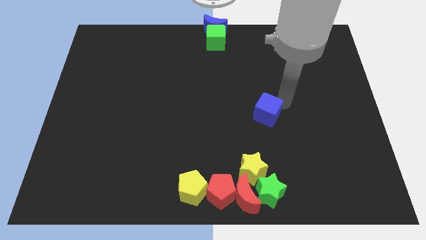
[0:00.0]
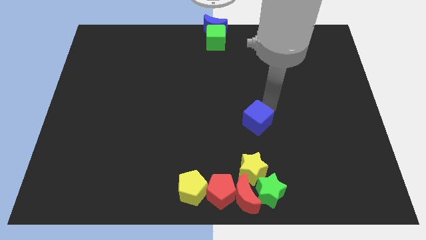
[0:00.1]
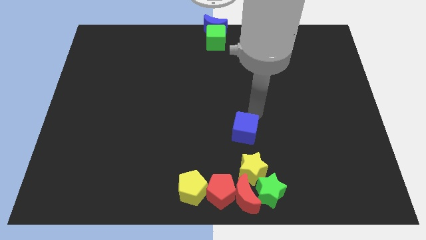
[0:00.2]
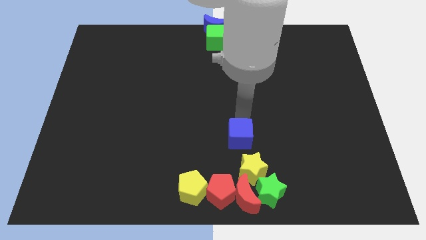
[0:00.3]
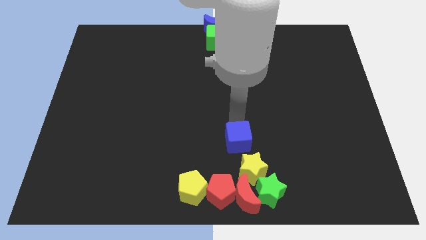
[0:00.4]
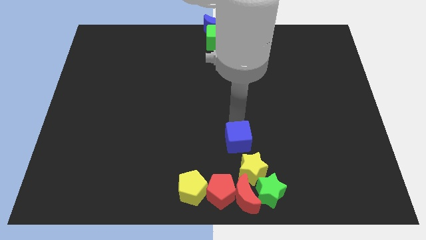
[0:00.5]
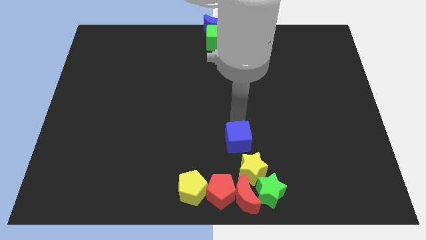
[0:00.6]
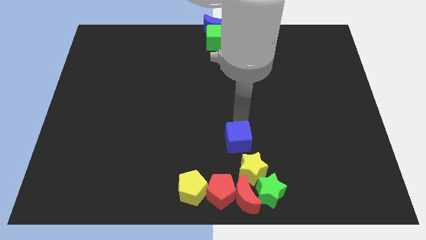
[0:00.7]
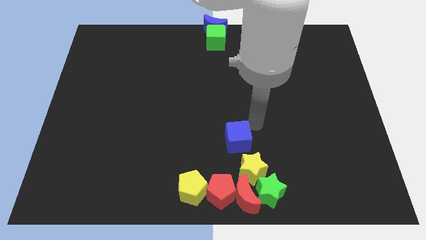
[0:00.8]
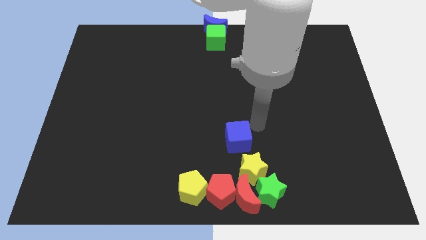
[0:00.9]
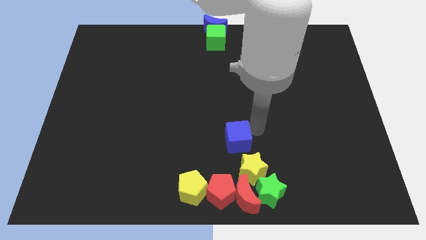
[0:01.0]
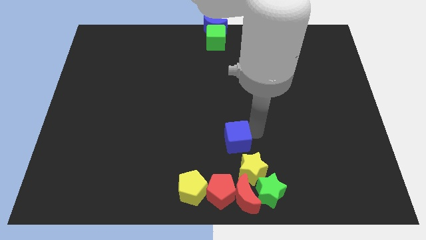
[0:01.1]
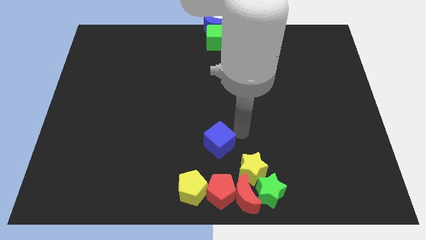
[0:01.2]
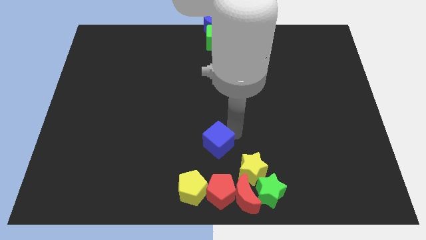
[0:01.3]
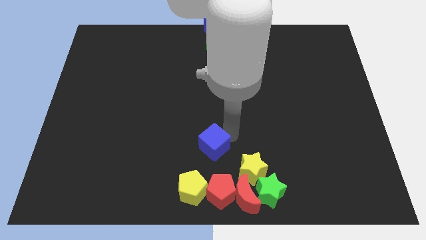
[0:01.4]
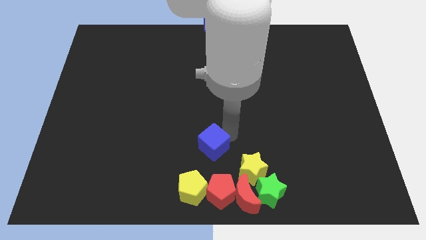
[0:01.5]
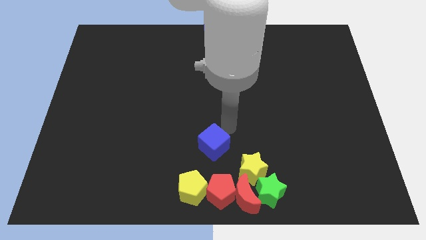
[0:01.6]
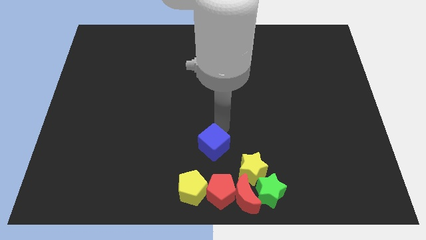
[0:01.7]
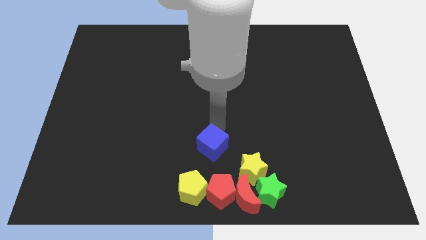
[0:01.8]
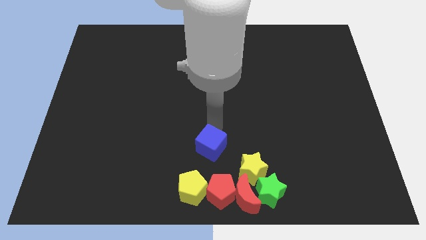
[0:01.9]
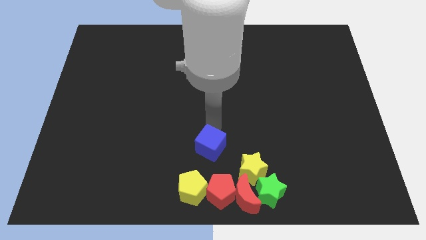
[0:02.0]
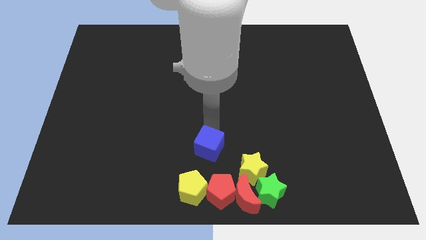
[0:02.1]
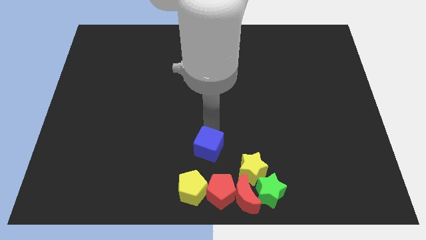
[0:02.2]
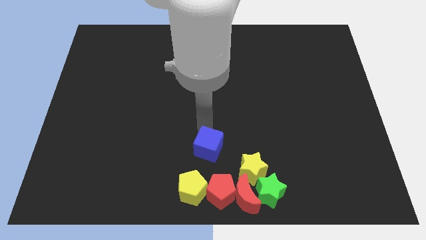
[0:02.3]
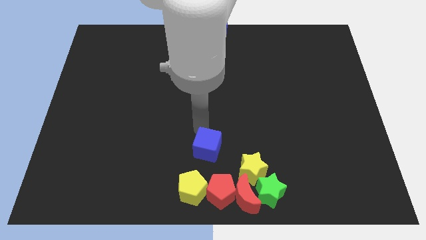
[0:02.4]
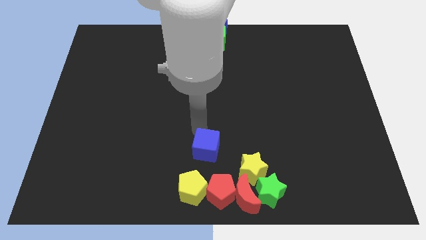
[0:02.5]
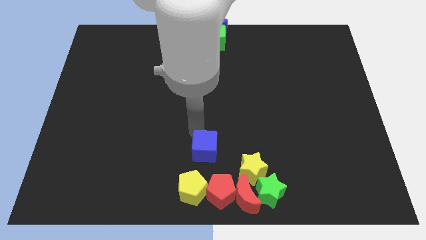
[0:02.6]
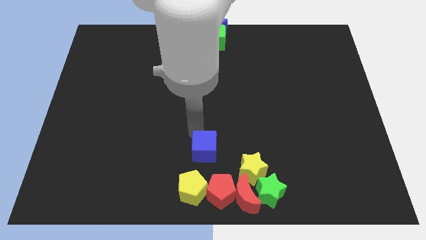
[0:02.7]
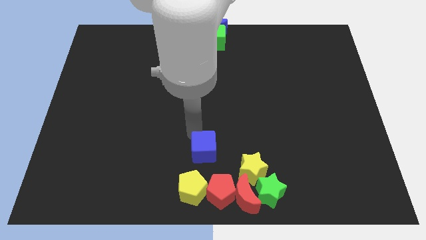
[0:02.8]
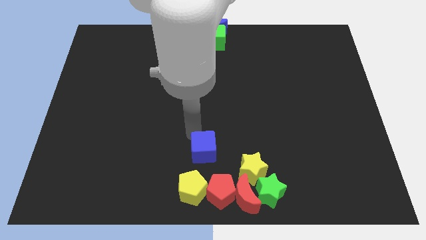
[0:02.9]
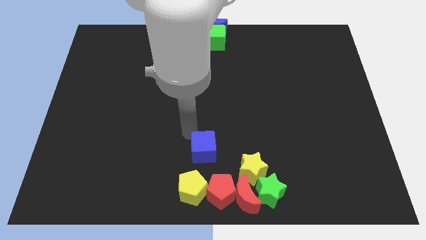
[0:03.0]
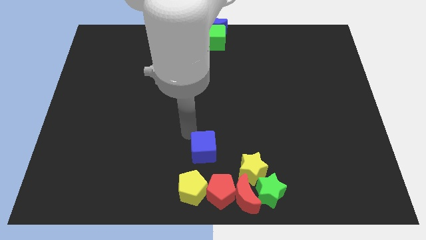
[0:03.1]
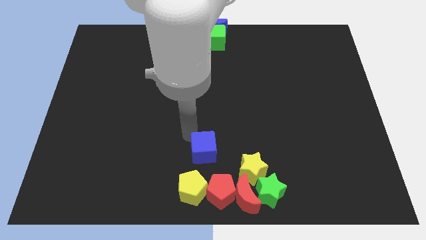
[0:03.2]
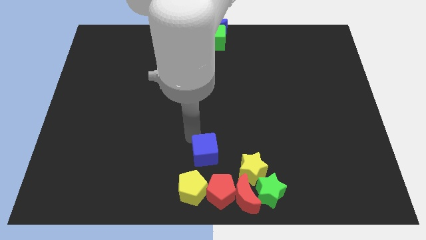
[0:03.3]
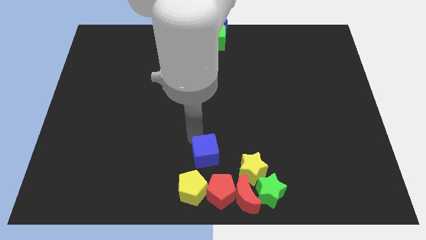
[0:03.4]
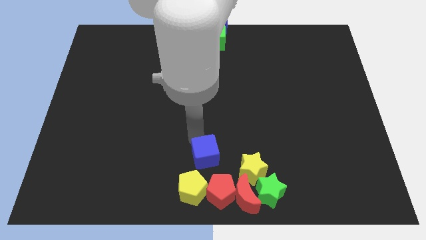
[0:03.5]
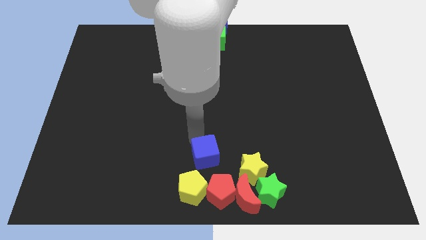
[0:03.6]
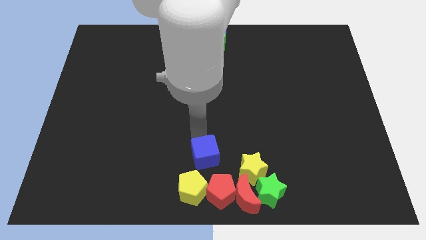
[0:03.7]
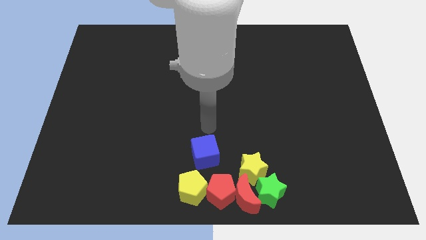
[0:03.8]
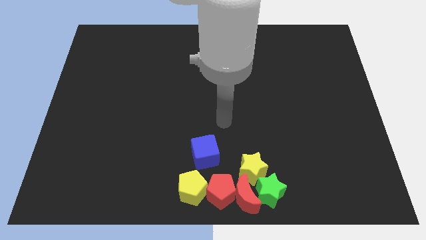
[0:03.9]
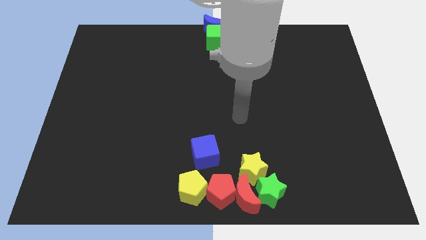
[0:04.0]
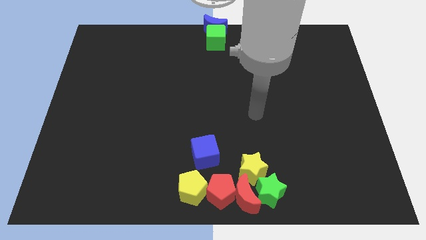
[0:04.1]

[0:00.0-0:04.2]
place blue cube above yellow pentagon

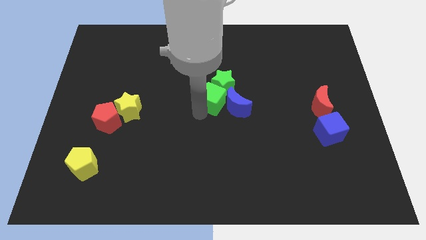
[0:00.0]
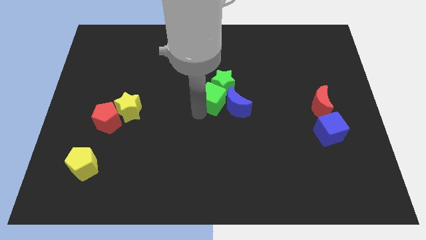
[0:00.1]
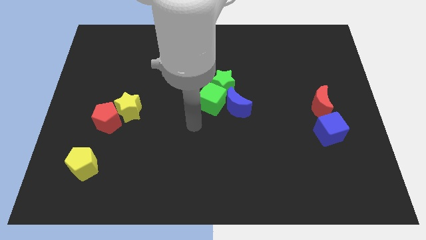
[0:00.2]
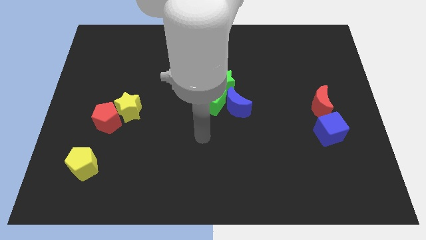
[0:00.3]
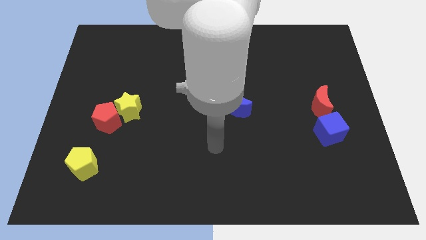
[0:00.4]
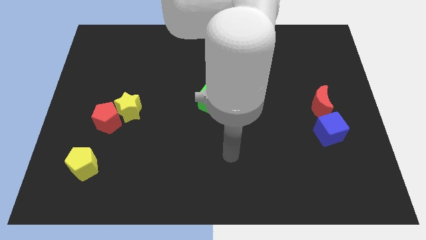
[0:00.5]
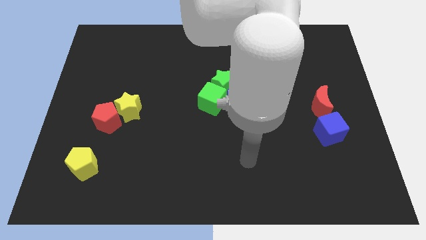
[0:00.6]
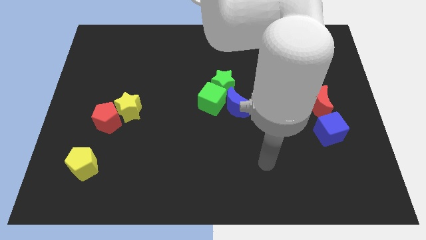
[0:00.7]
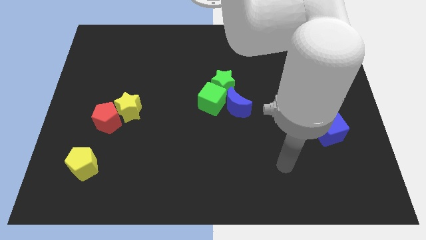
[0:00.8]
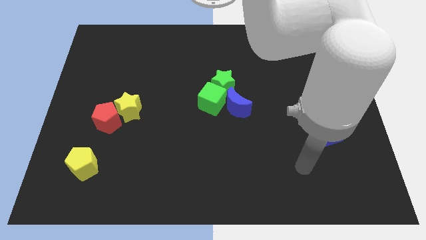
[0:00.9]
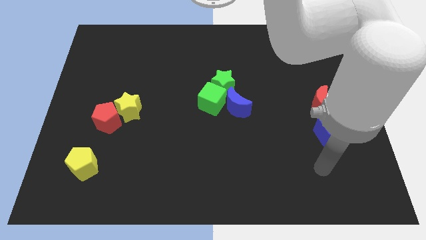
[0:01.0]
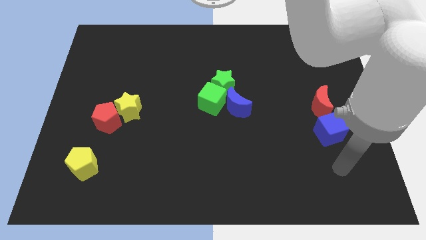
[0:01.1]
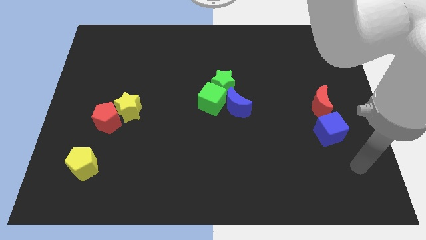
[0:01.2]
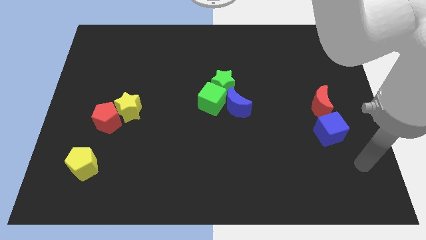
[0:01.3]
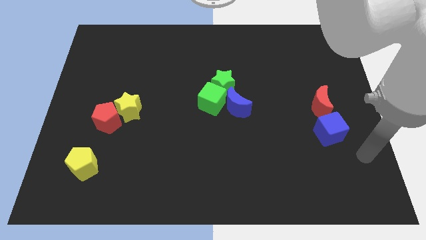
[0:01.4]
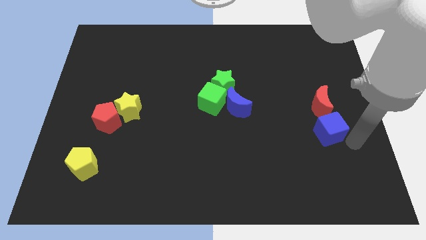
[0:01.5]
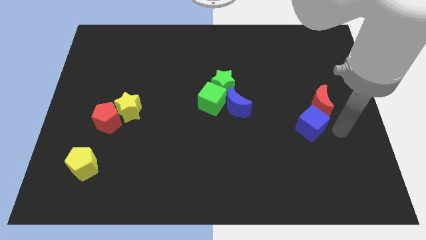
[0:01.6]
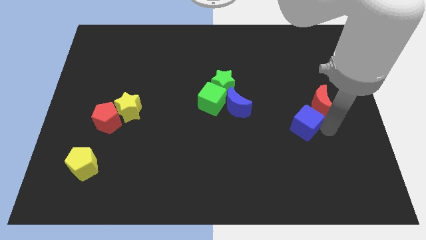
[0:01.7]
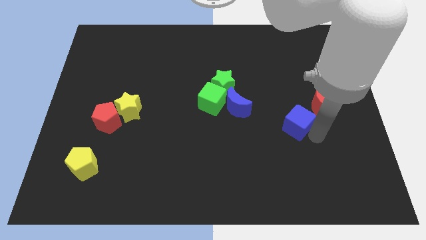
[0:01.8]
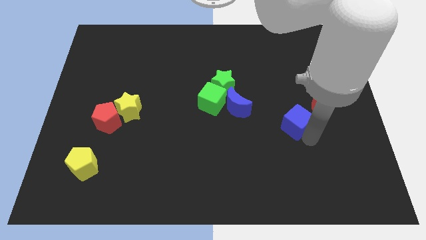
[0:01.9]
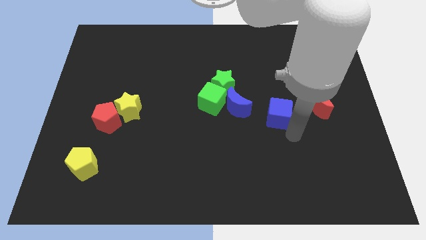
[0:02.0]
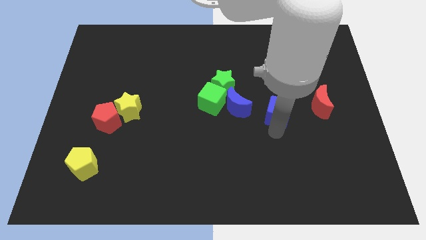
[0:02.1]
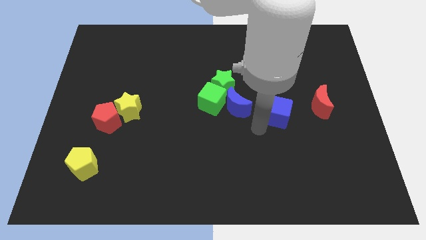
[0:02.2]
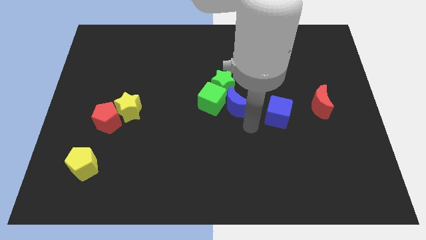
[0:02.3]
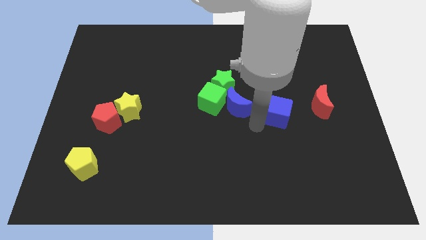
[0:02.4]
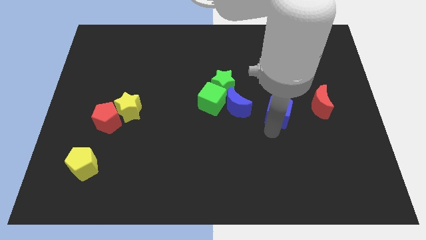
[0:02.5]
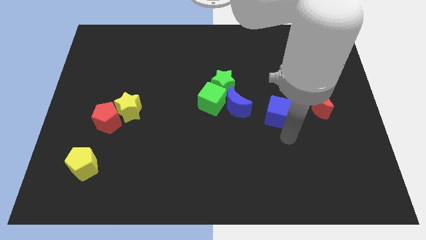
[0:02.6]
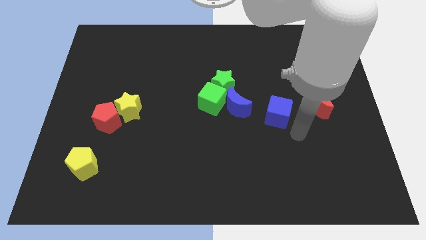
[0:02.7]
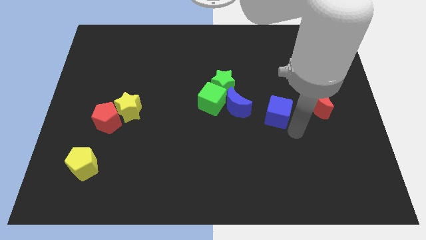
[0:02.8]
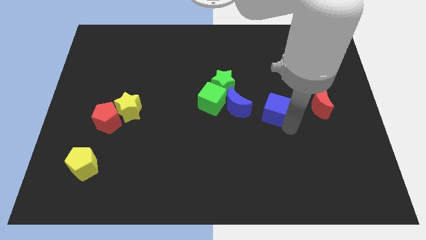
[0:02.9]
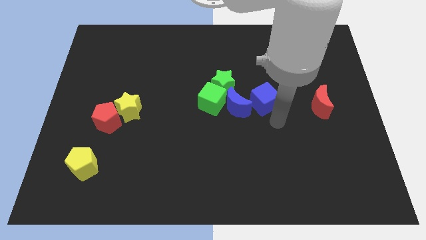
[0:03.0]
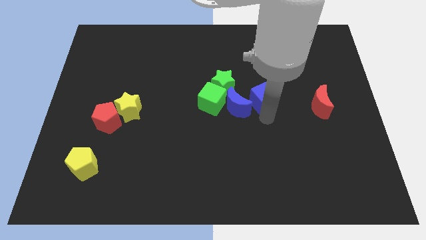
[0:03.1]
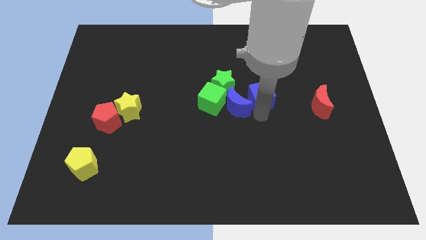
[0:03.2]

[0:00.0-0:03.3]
place the blue cube close to the blue crescent

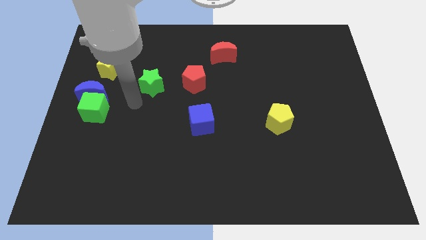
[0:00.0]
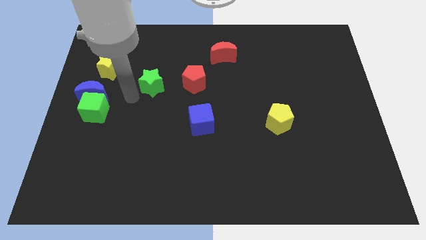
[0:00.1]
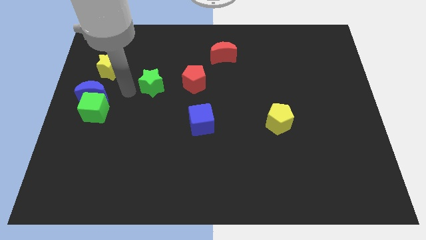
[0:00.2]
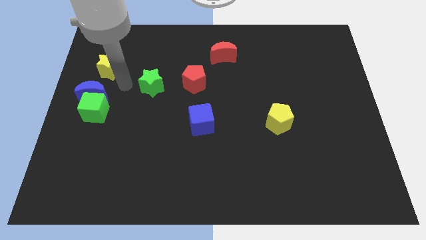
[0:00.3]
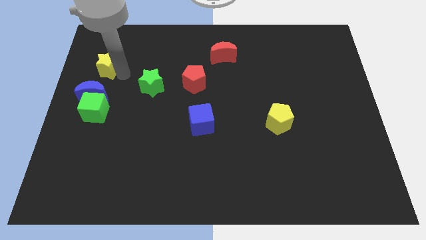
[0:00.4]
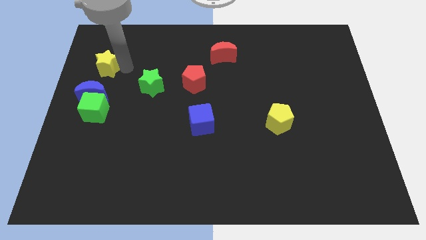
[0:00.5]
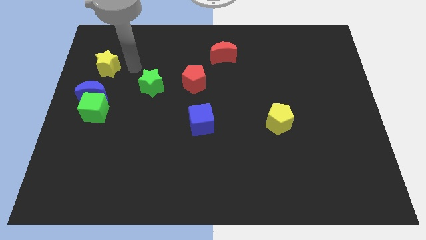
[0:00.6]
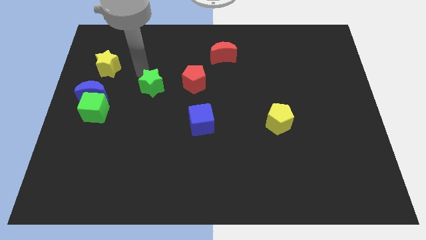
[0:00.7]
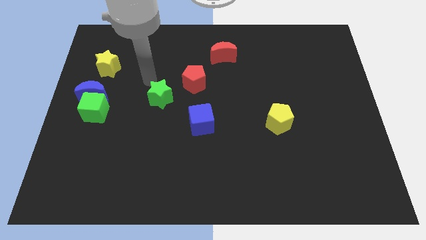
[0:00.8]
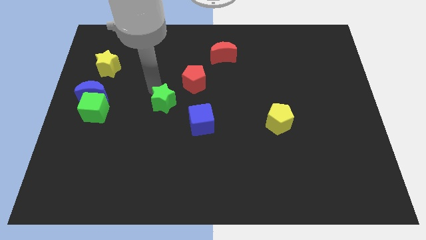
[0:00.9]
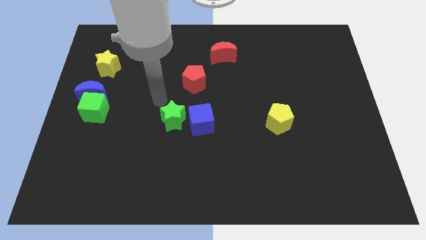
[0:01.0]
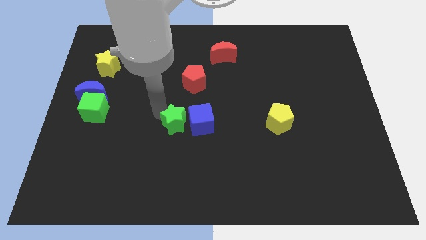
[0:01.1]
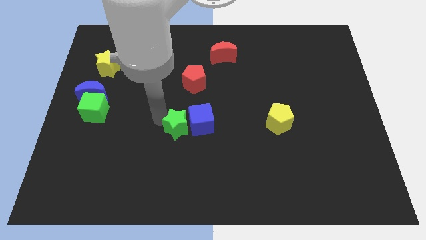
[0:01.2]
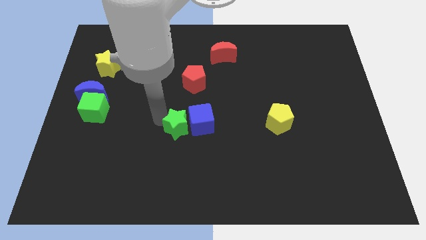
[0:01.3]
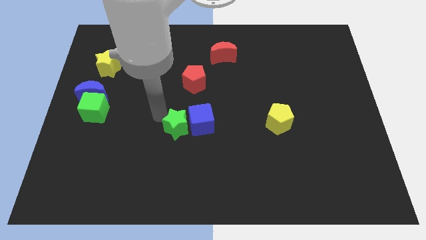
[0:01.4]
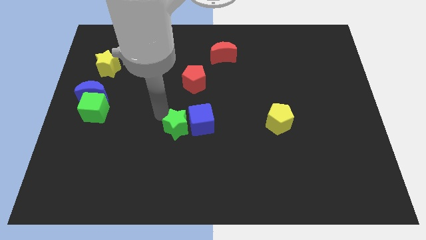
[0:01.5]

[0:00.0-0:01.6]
move the green star to the left side of the blue cube
